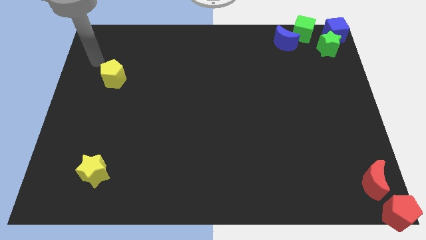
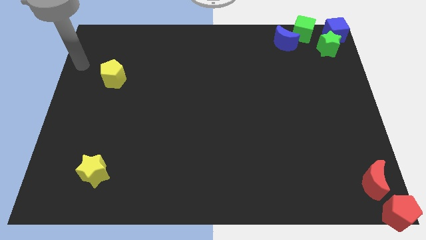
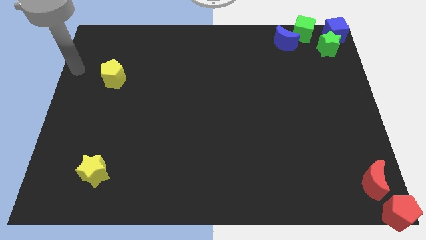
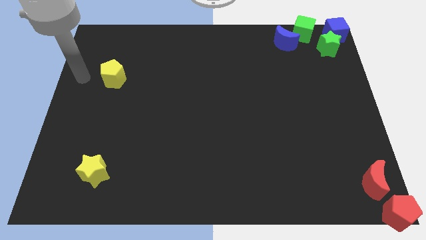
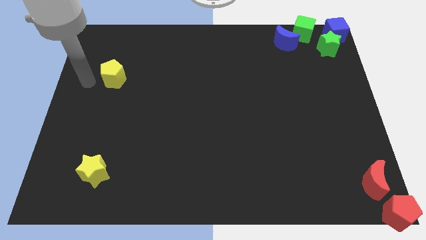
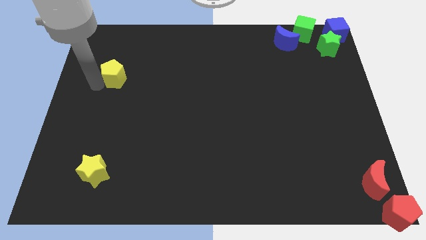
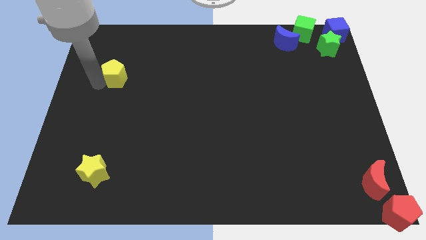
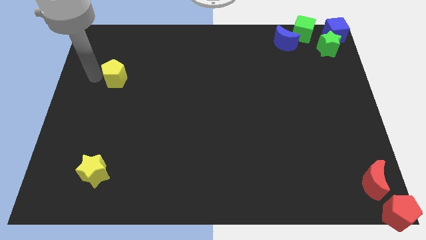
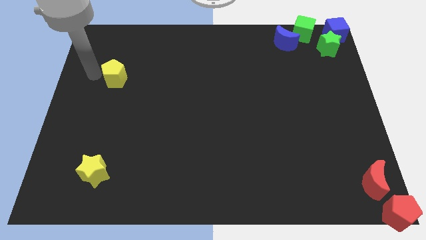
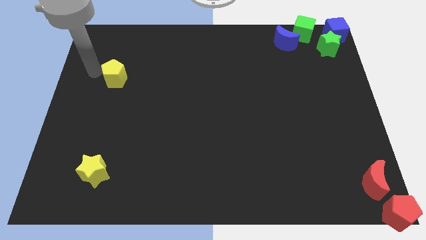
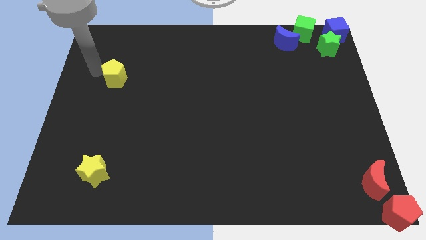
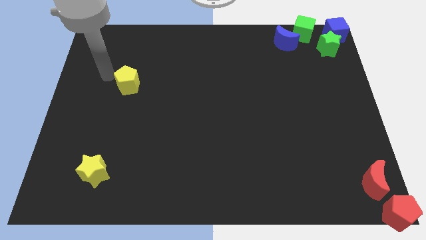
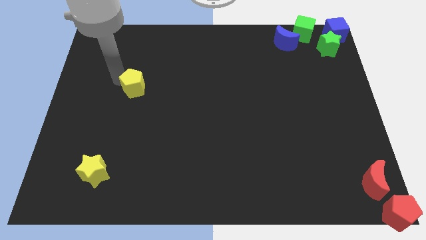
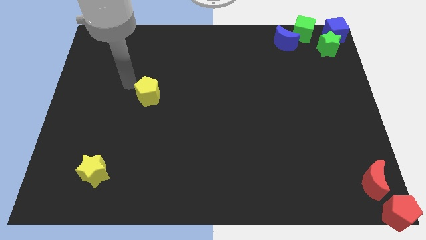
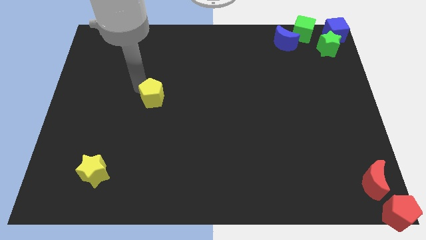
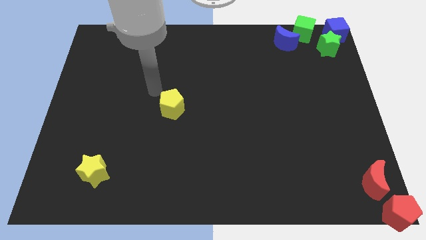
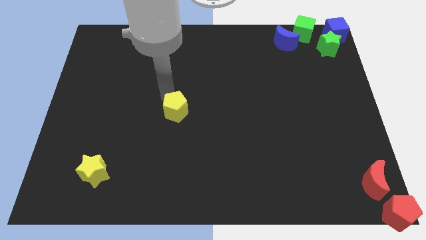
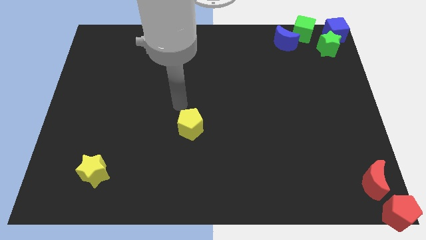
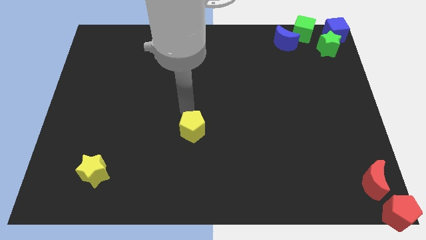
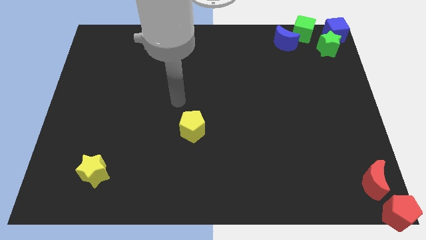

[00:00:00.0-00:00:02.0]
move the yellow pentagon towards the bottom center

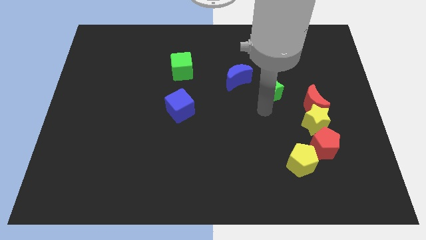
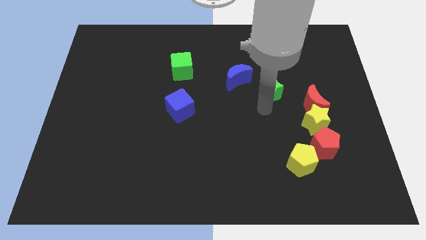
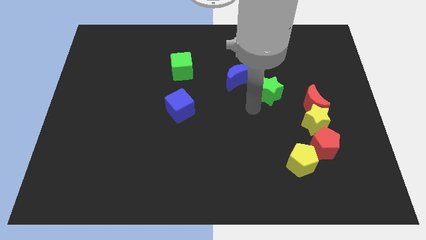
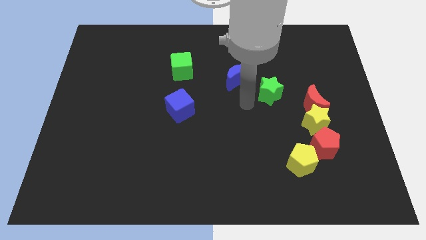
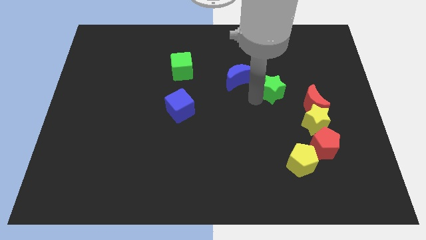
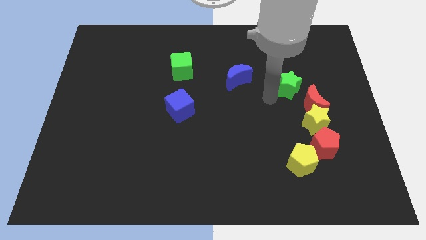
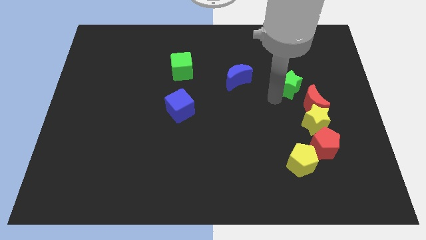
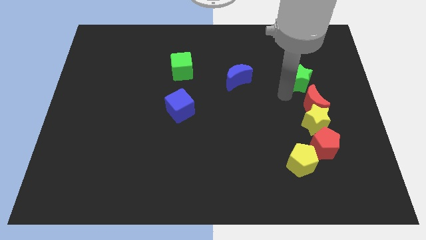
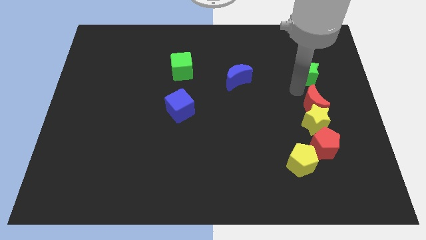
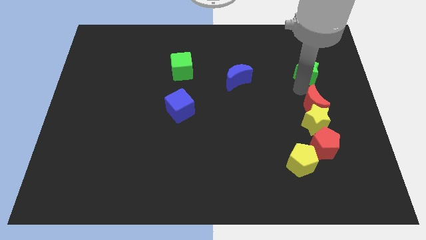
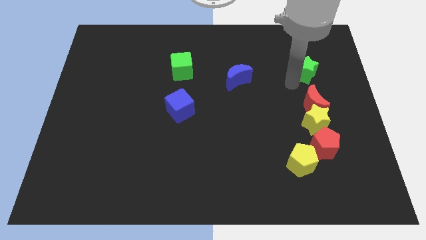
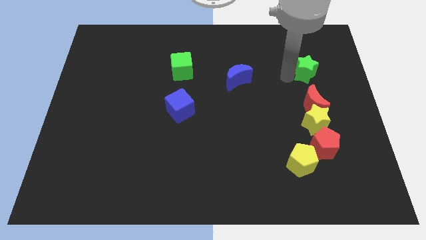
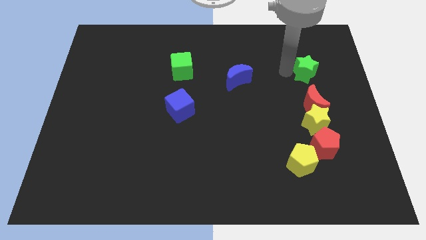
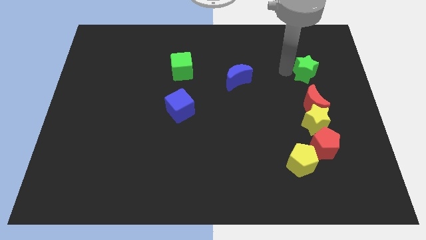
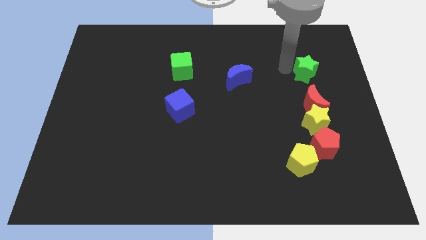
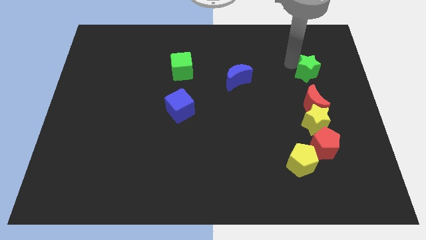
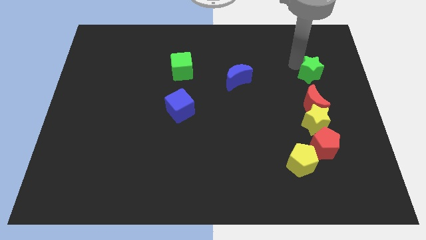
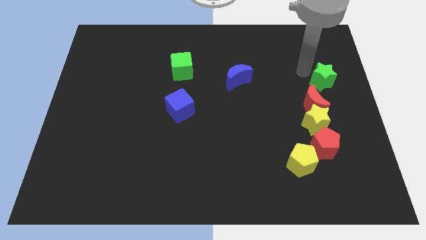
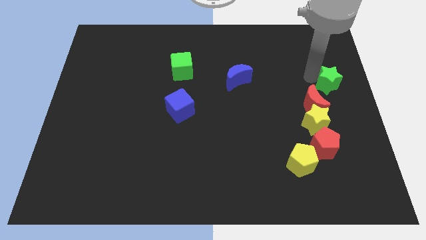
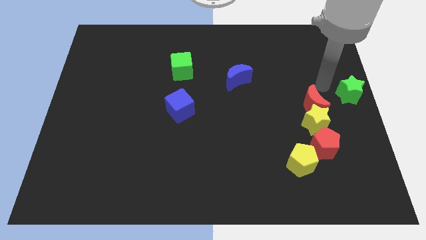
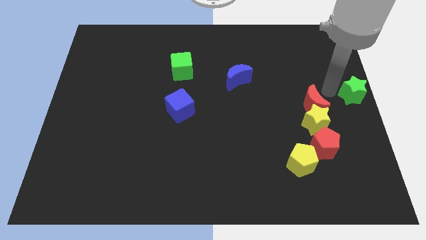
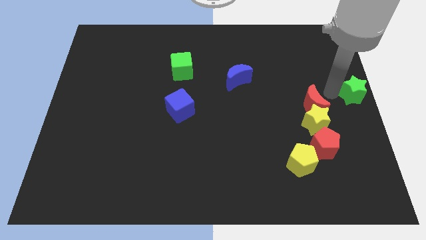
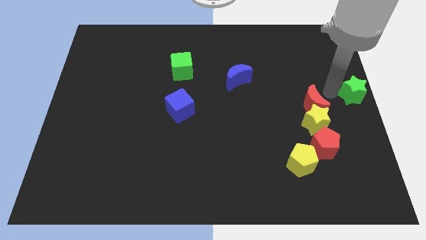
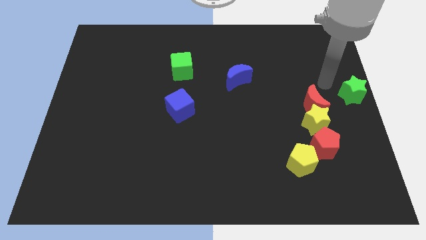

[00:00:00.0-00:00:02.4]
move the green star towards the right center corner of the board

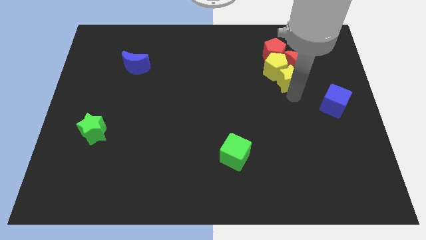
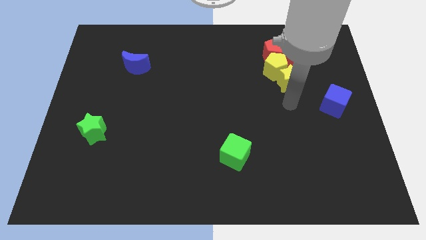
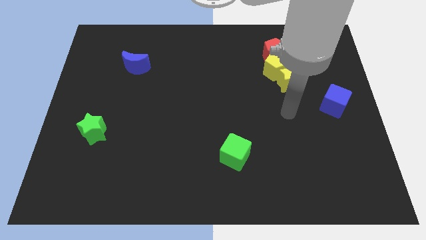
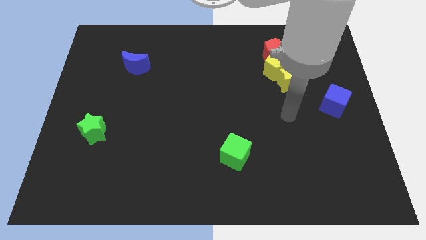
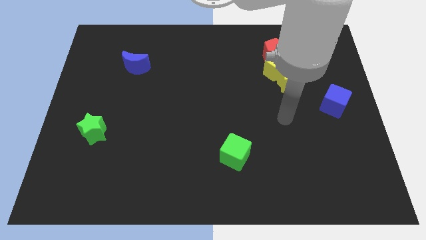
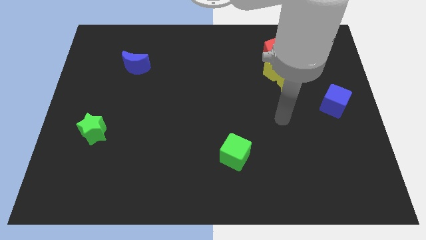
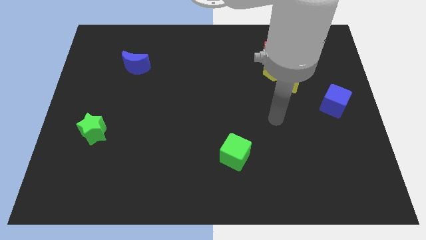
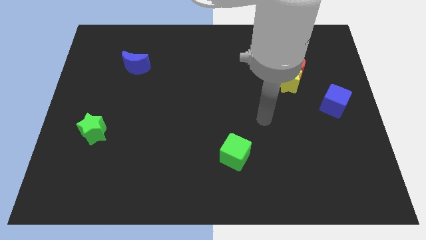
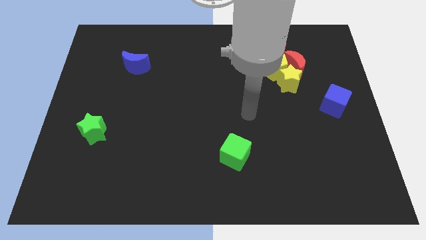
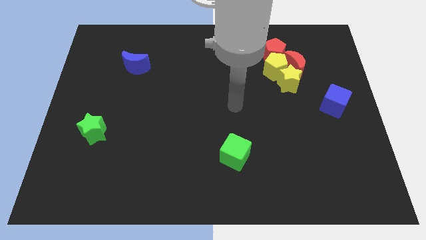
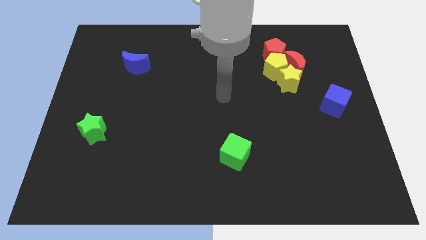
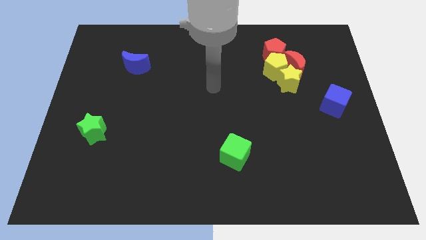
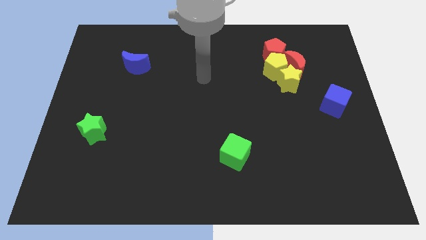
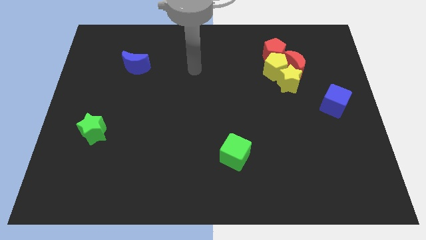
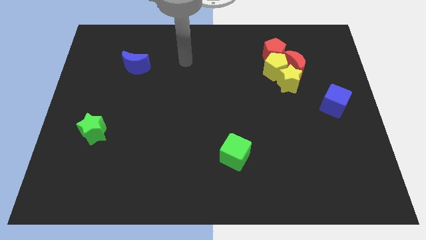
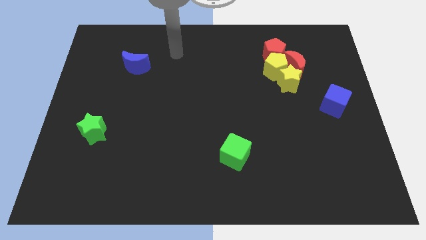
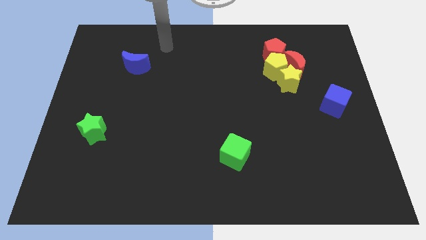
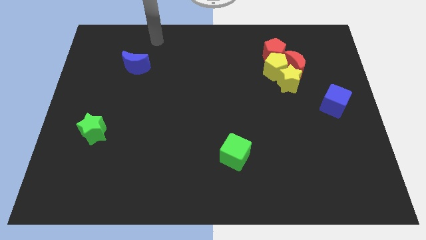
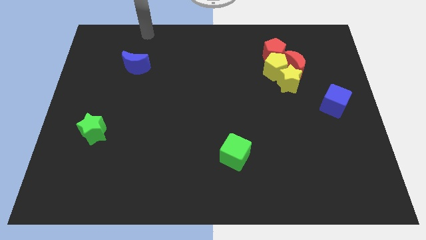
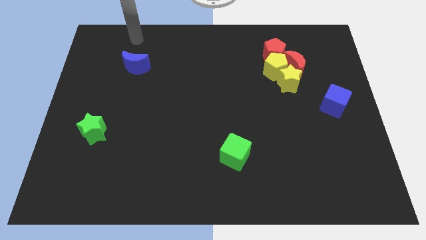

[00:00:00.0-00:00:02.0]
move your arm towards the blue crescent

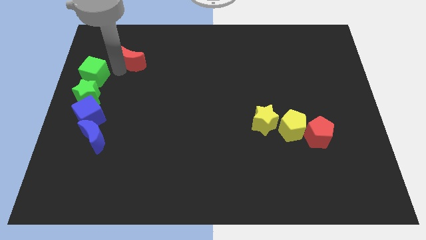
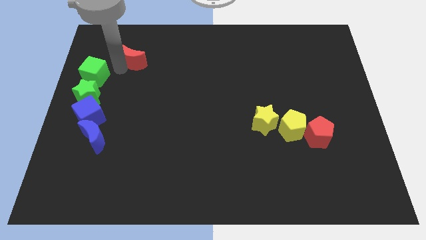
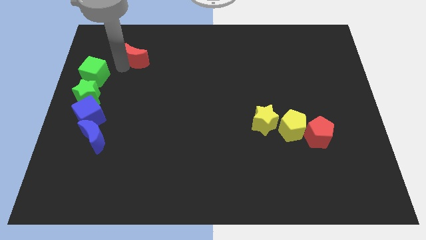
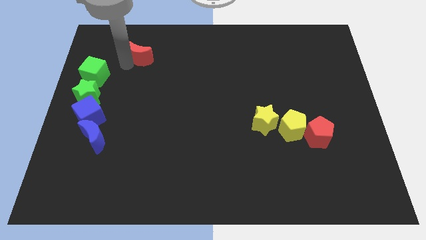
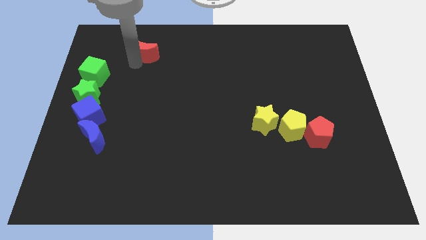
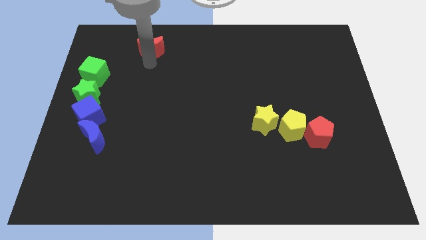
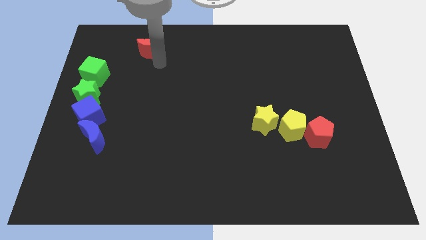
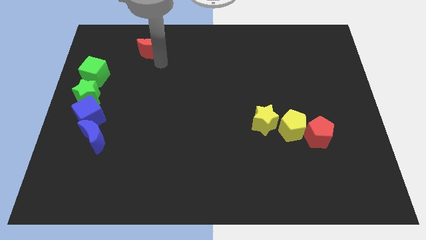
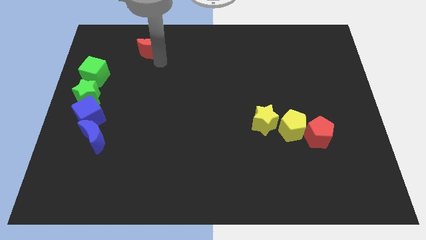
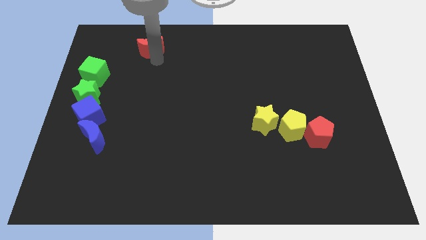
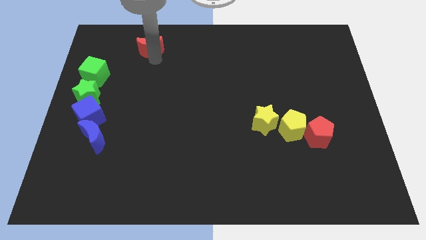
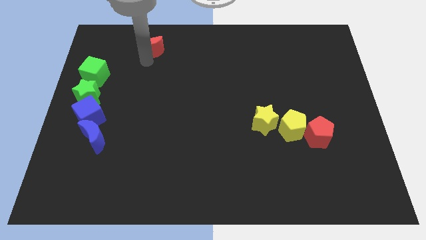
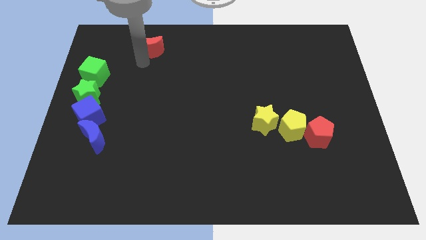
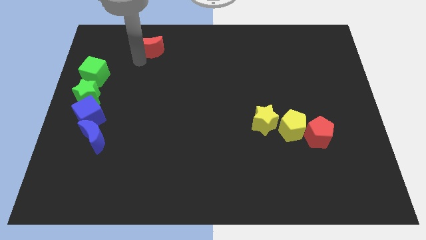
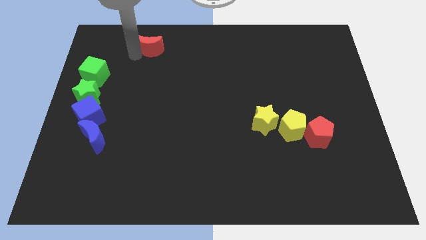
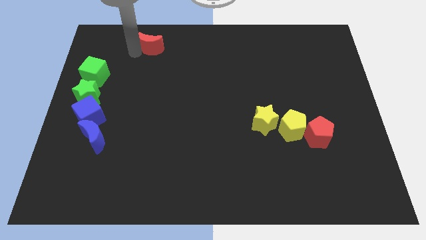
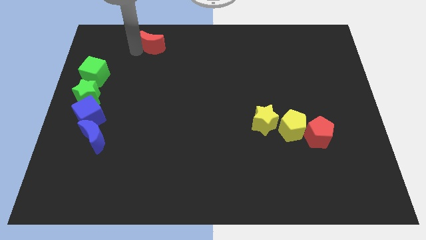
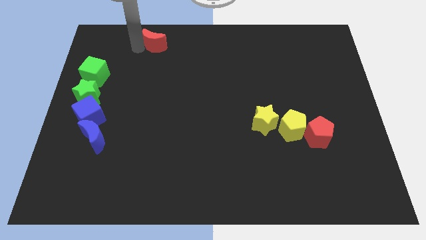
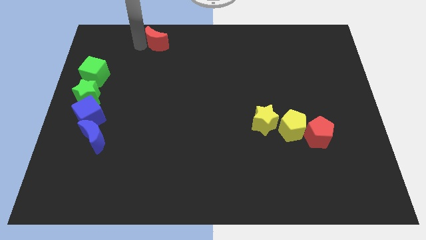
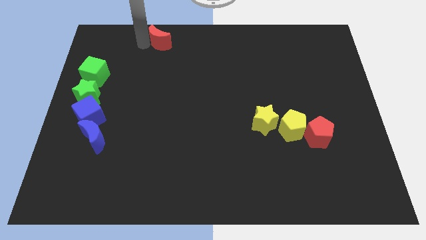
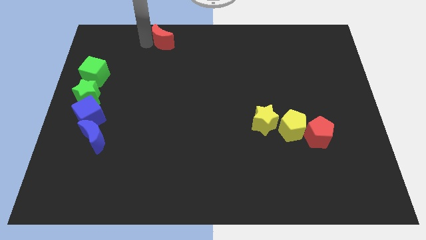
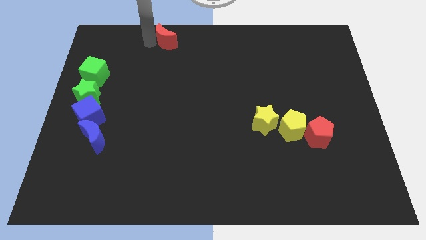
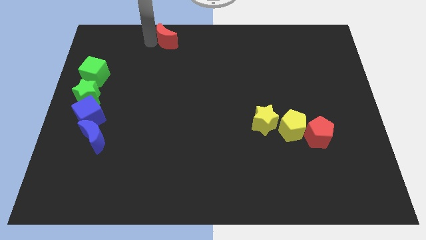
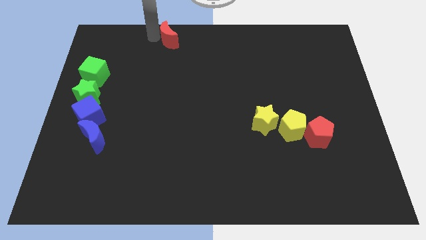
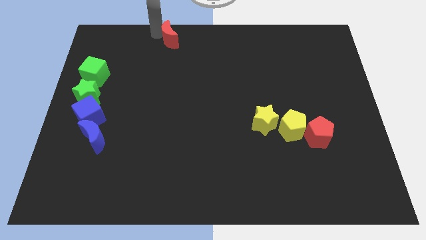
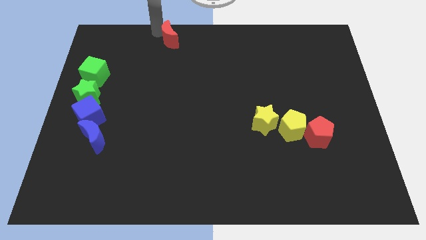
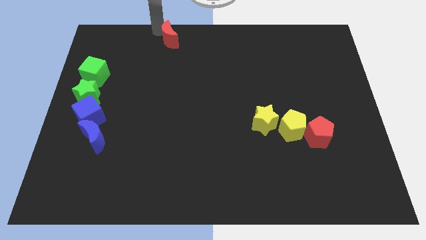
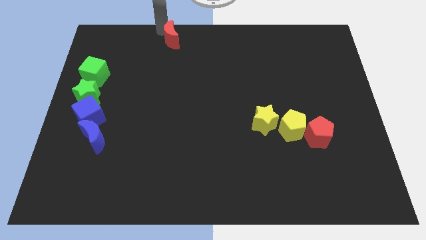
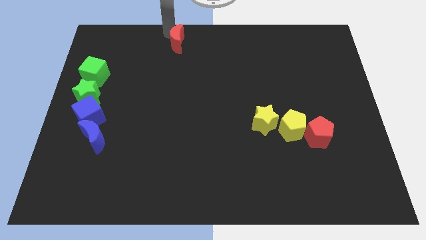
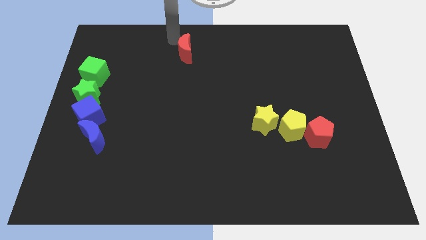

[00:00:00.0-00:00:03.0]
move the red moon to the above of the board
